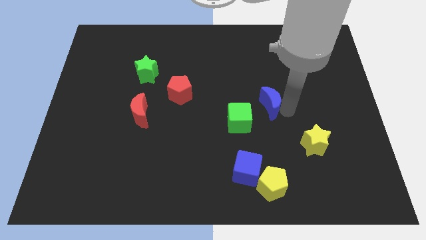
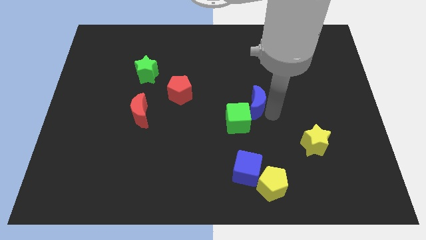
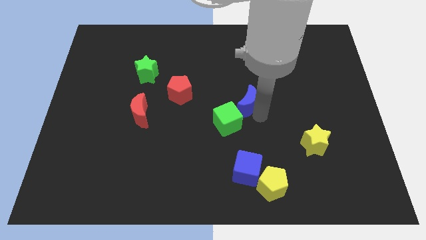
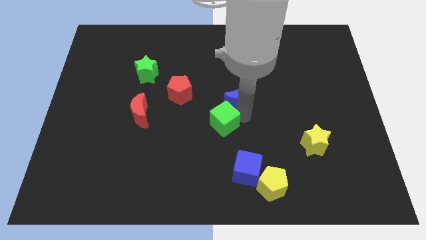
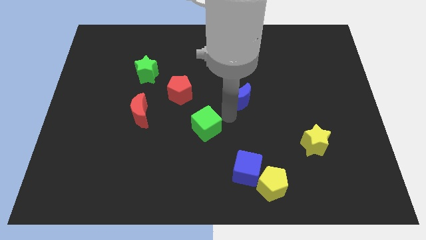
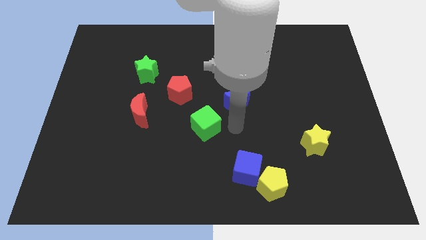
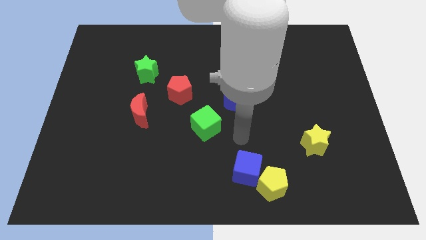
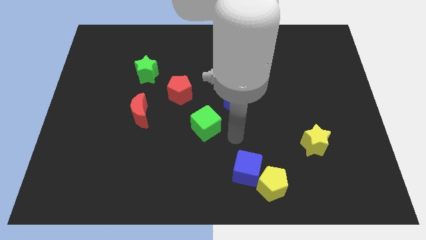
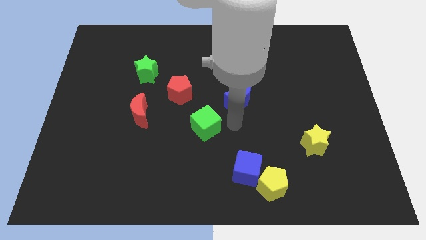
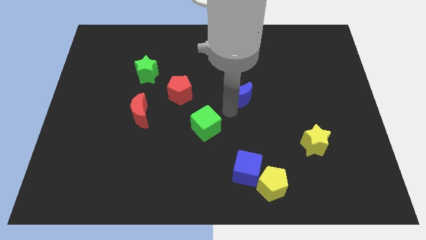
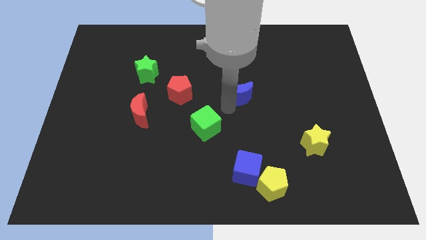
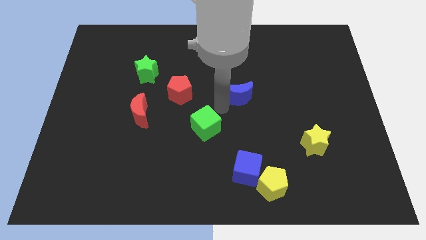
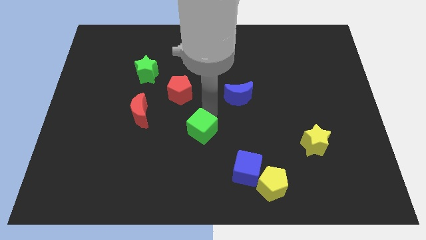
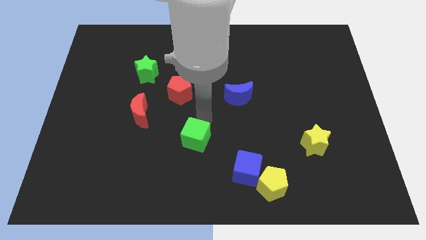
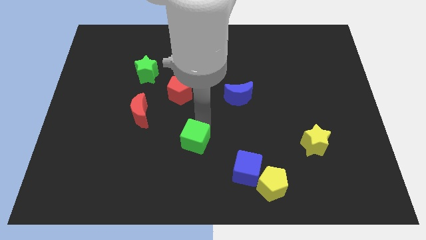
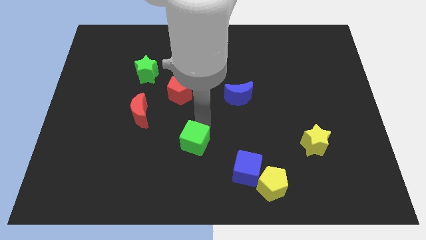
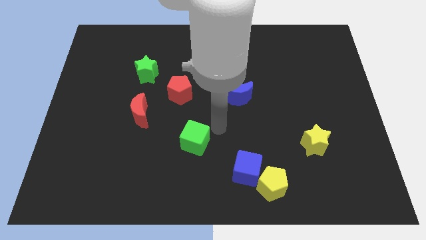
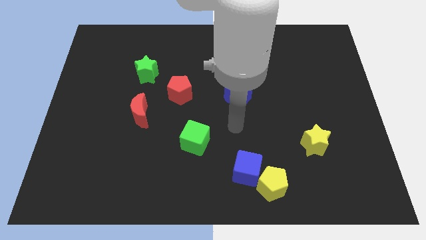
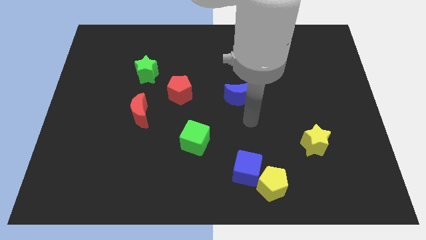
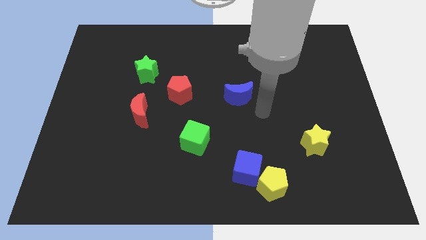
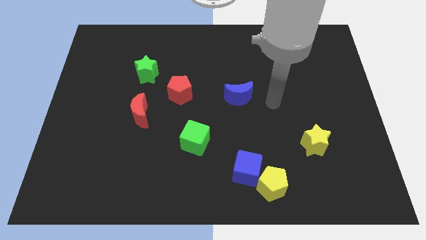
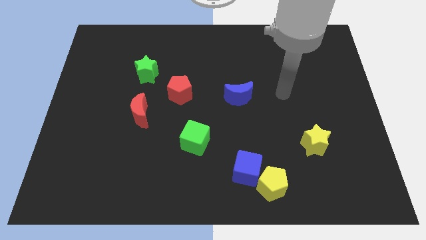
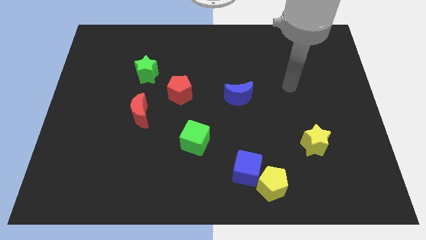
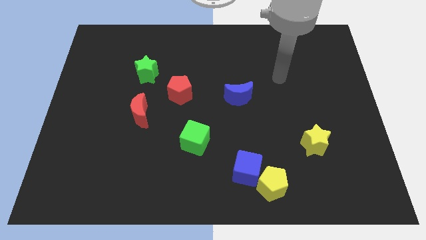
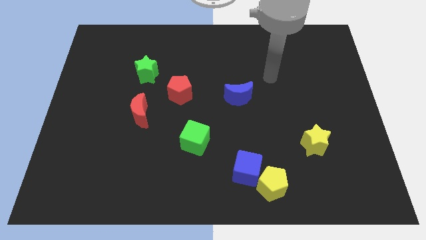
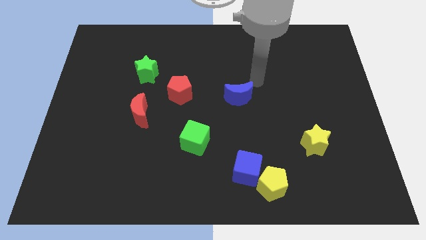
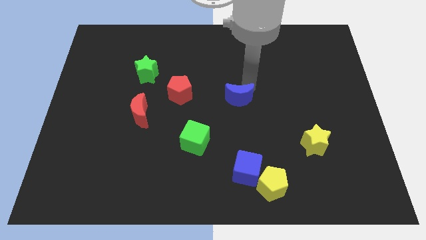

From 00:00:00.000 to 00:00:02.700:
move the green cube with the blue moon

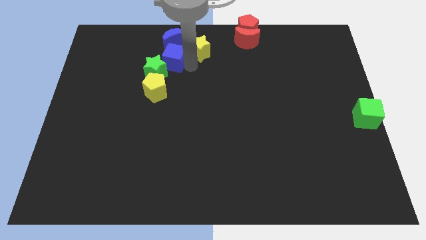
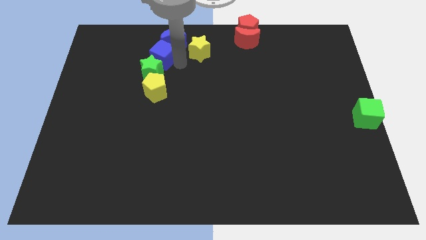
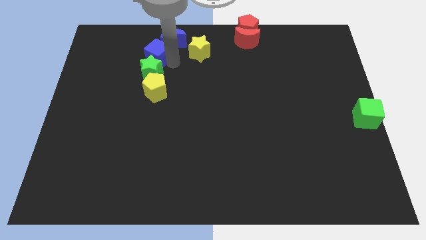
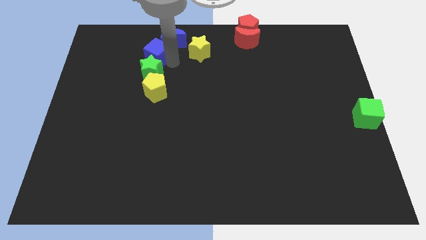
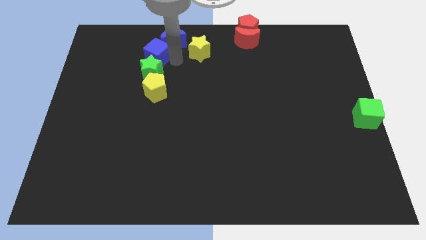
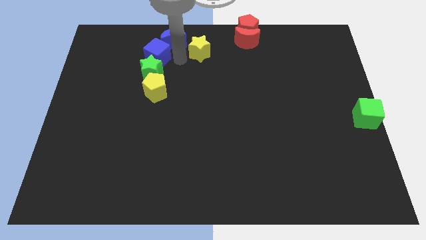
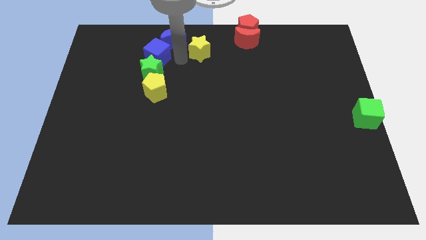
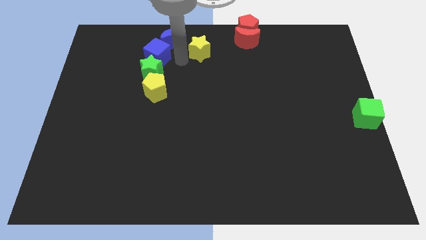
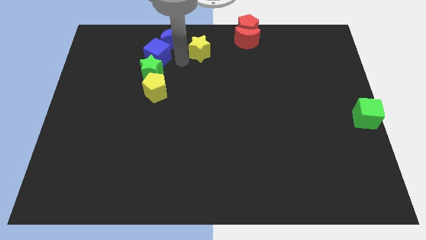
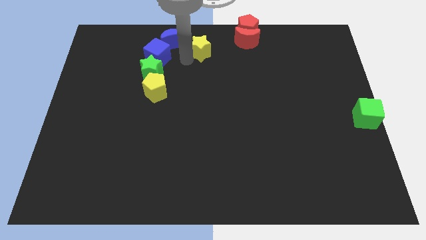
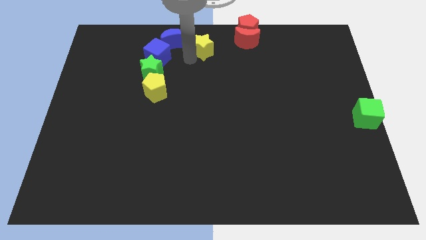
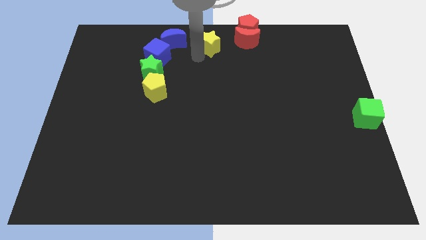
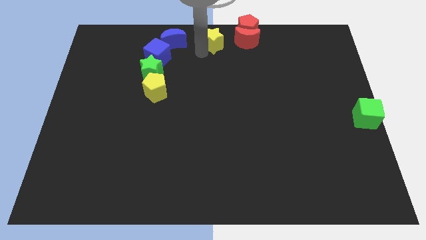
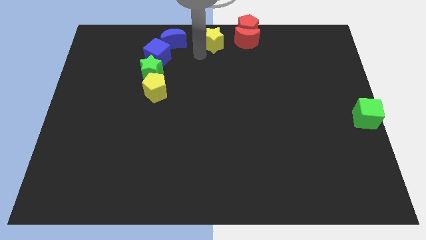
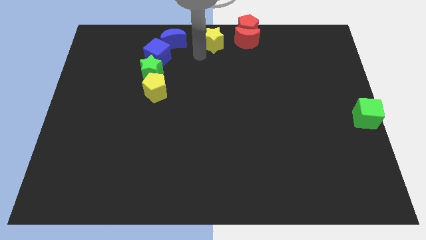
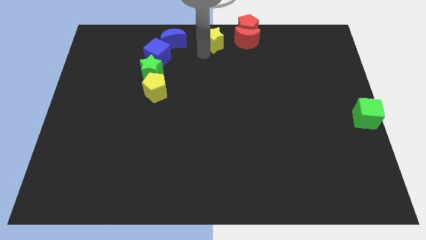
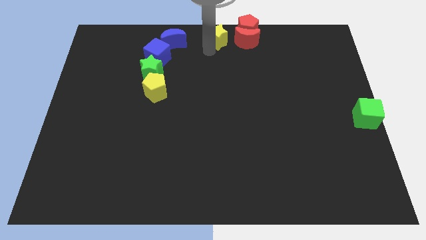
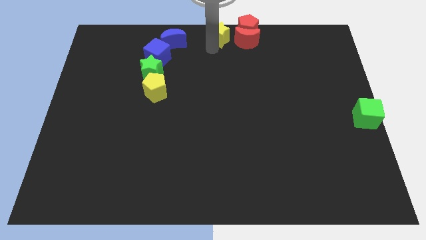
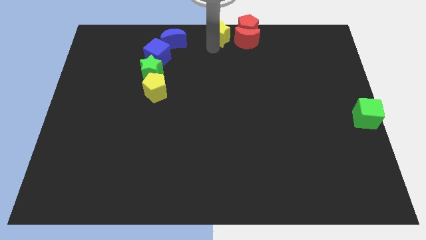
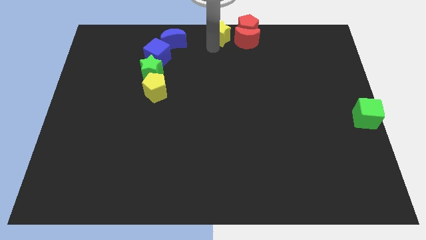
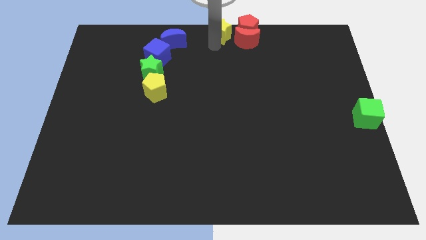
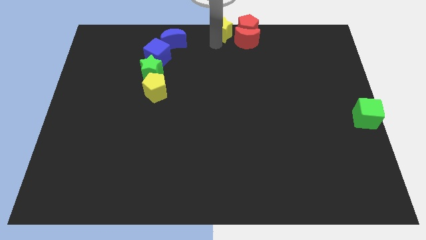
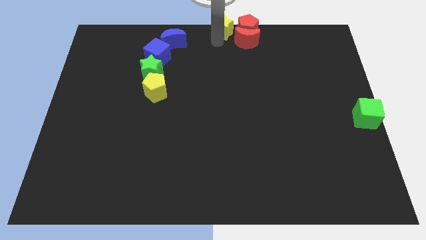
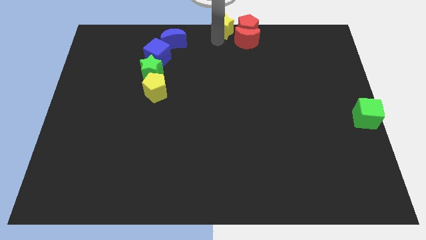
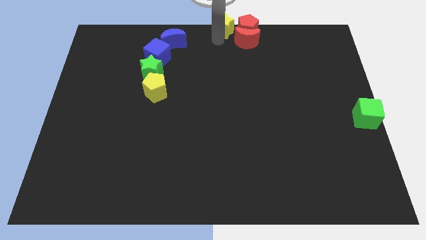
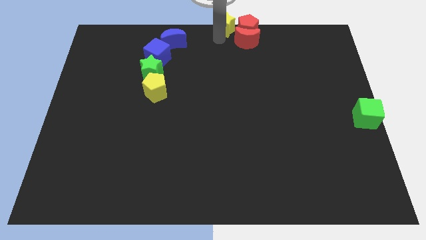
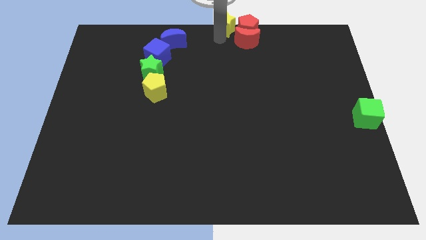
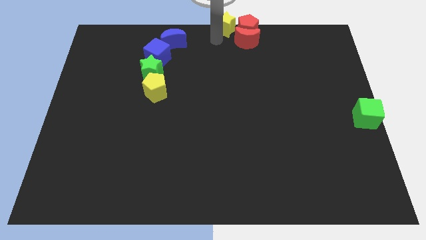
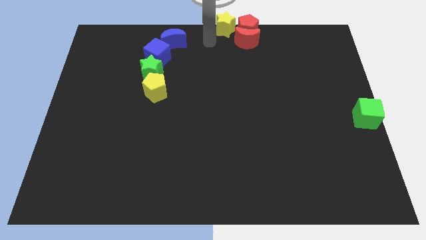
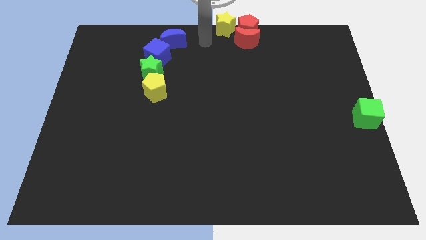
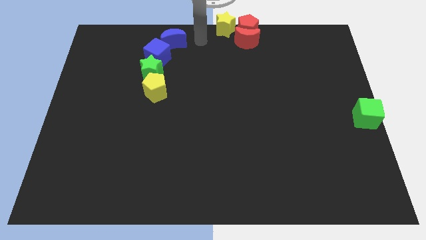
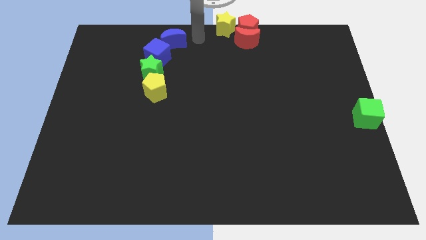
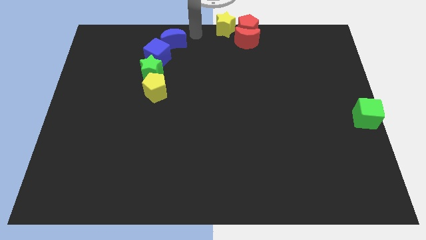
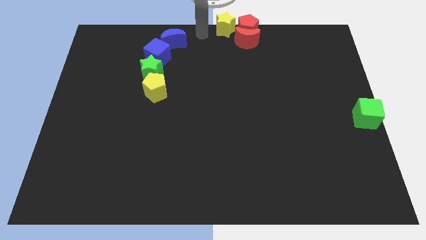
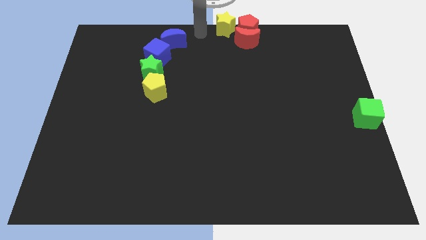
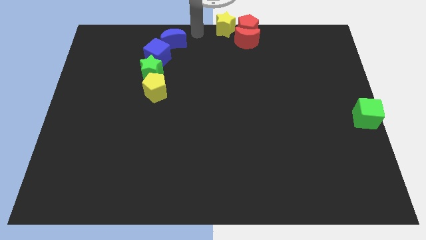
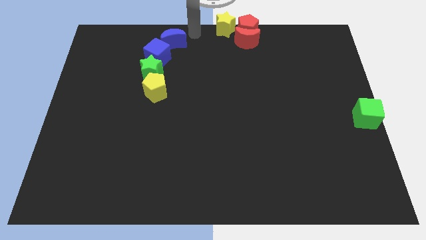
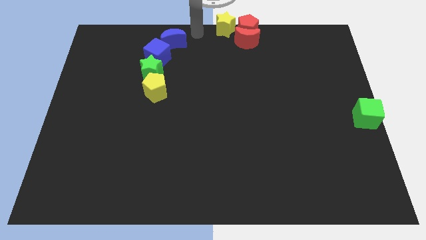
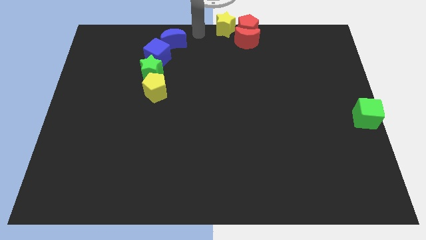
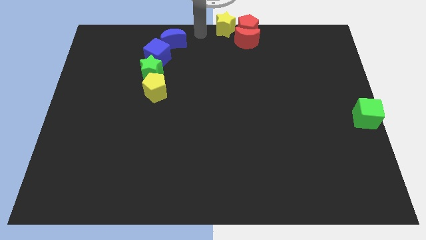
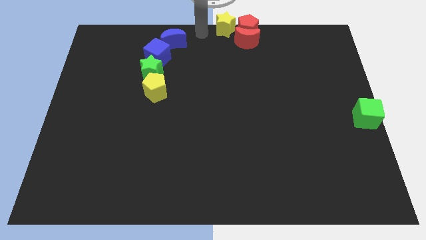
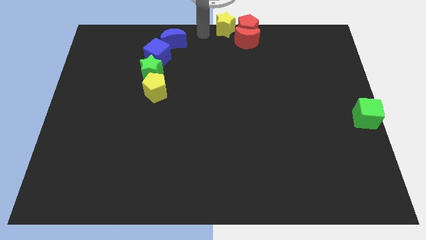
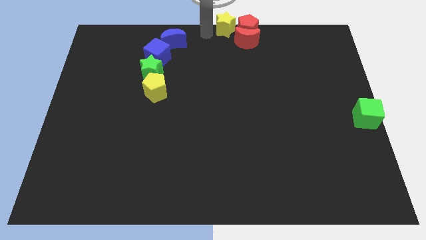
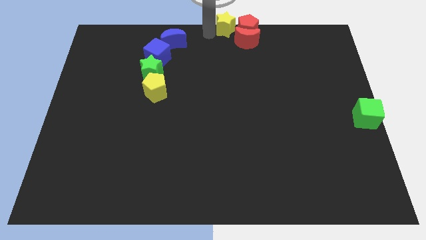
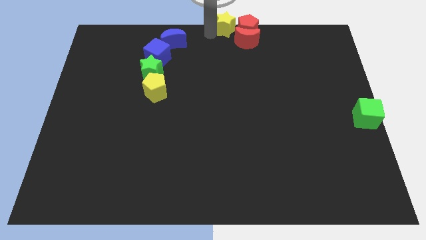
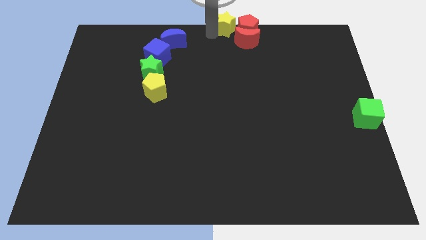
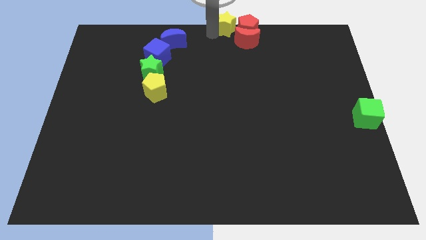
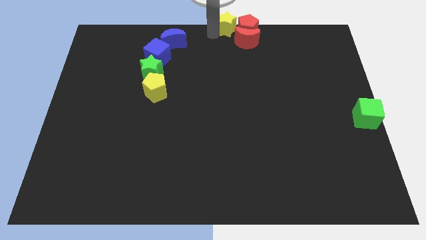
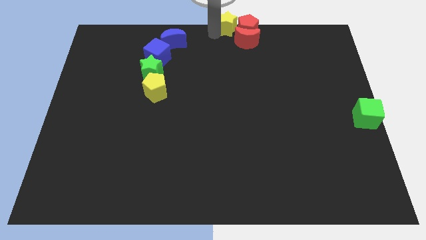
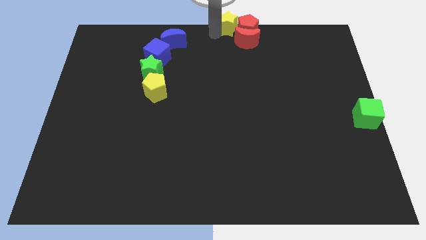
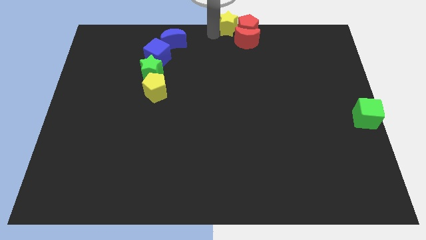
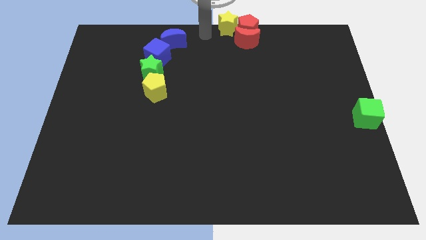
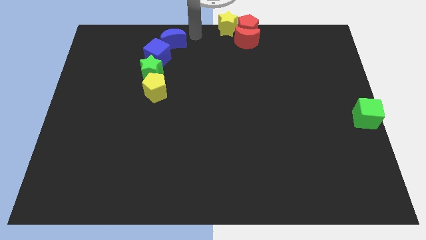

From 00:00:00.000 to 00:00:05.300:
push the yellow star close to the group of red blocks

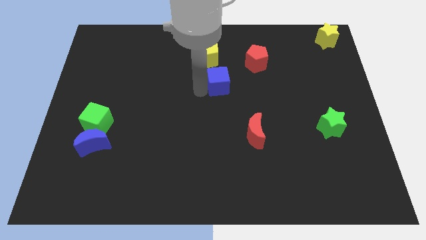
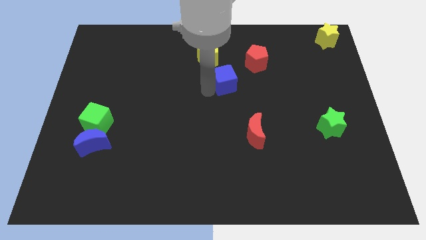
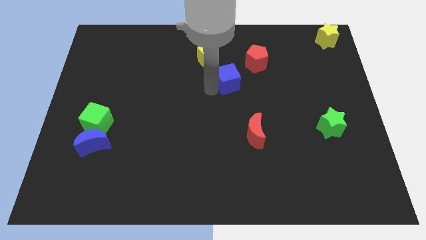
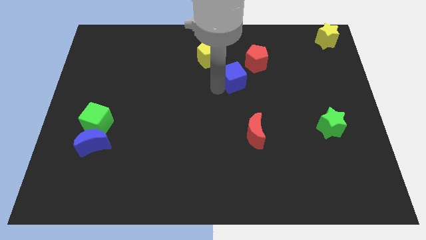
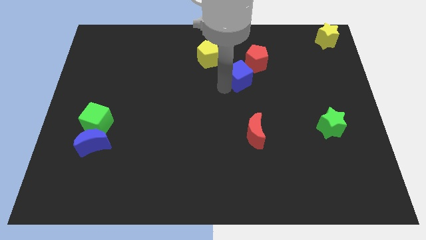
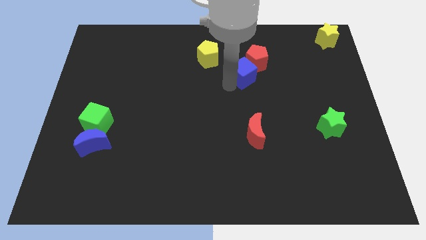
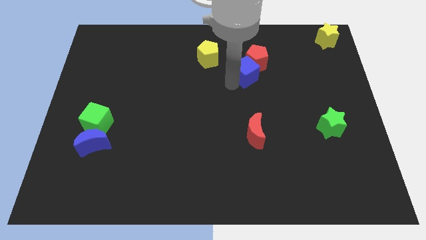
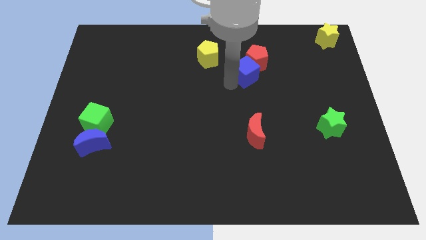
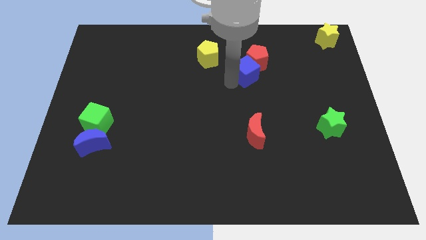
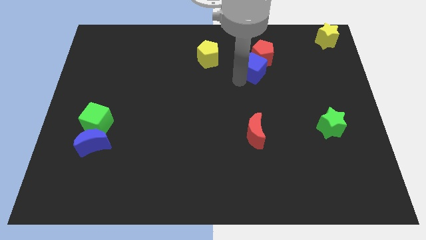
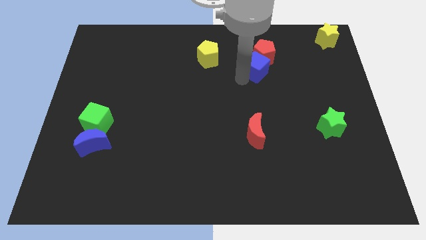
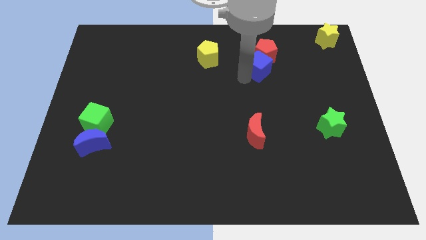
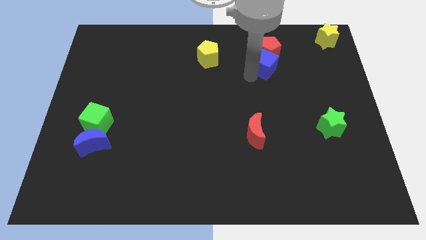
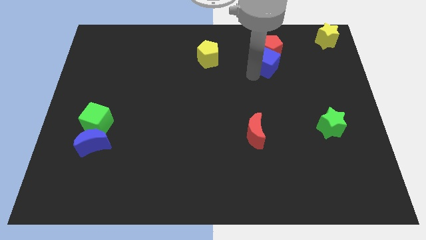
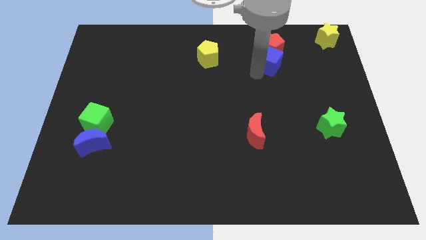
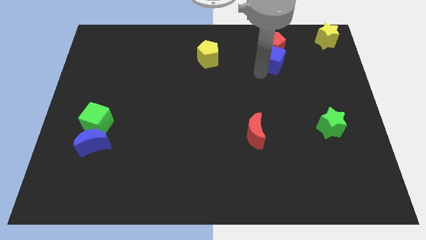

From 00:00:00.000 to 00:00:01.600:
push the blue cube into the red pentagon
